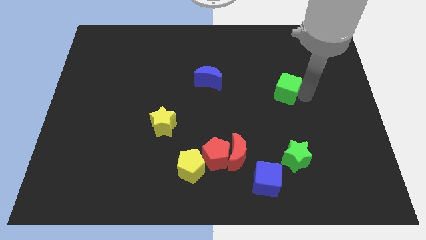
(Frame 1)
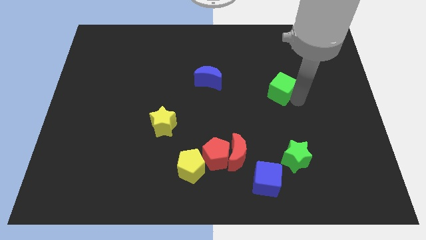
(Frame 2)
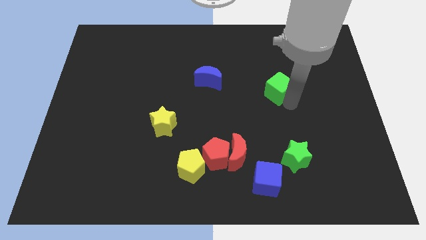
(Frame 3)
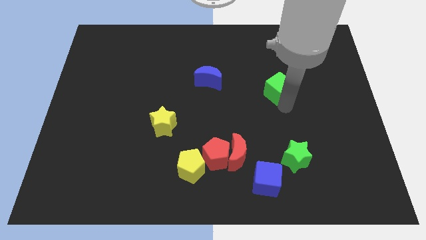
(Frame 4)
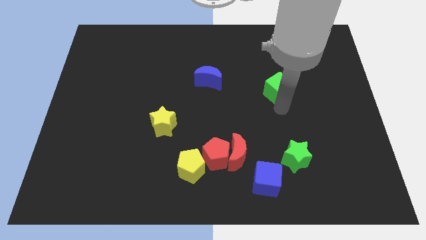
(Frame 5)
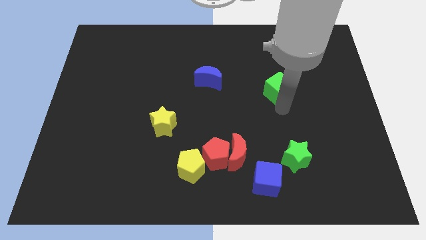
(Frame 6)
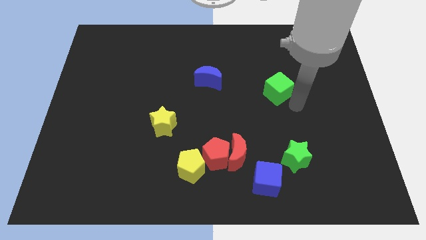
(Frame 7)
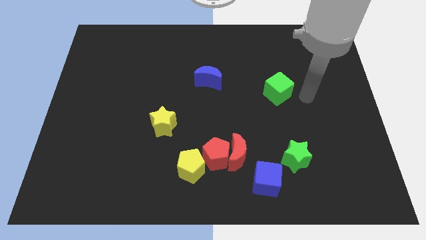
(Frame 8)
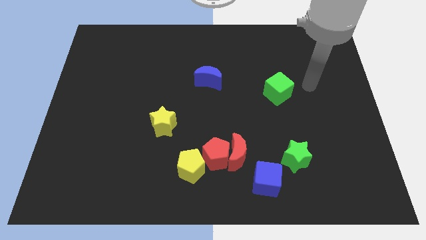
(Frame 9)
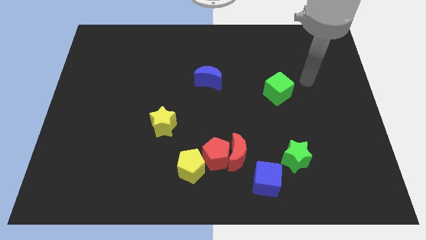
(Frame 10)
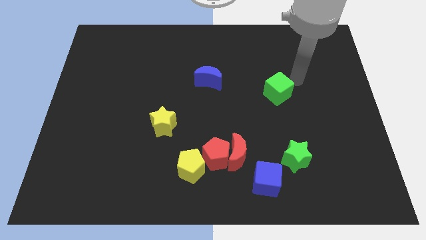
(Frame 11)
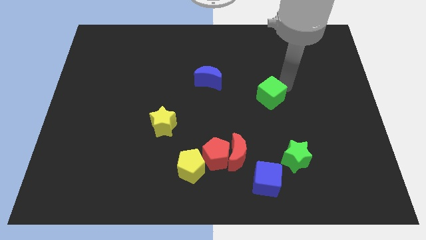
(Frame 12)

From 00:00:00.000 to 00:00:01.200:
push green cube below blue cube

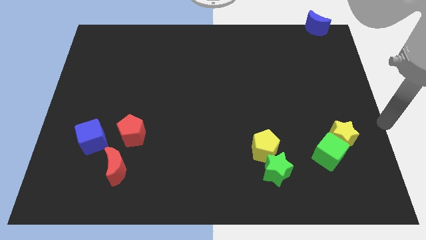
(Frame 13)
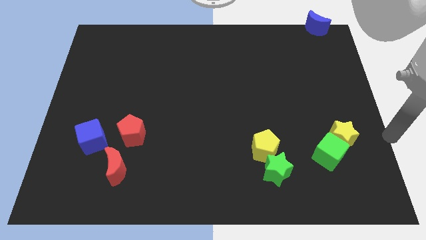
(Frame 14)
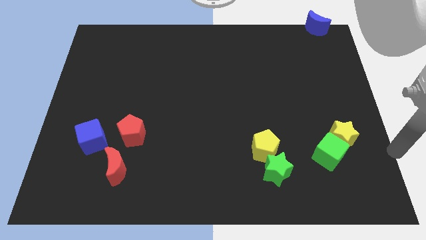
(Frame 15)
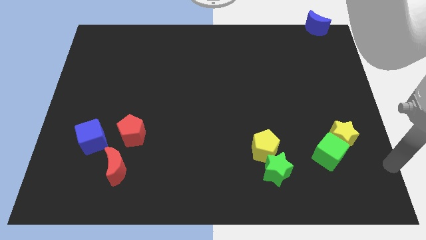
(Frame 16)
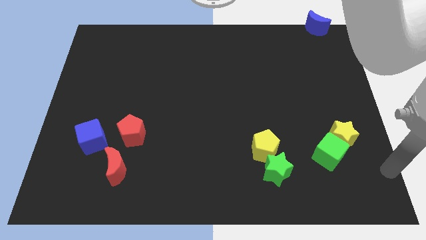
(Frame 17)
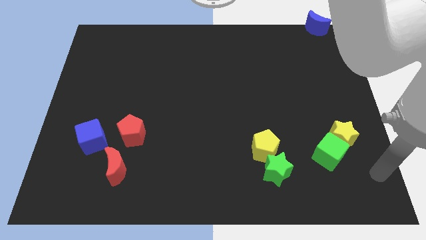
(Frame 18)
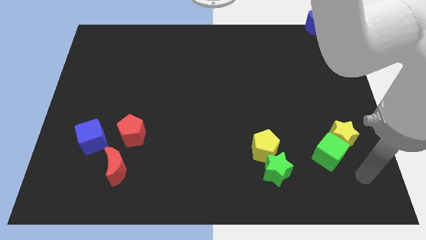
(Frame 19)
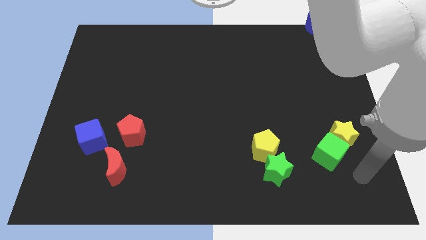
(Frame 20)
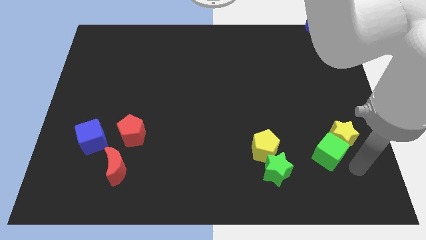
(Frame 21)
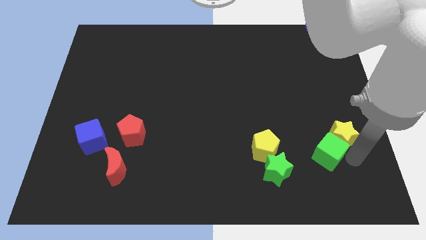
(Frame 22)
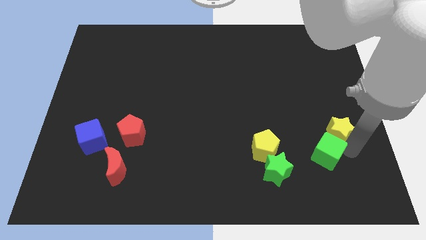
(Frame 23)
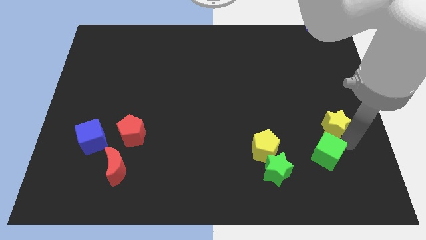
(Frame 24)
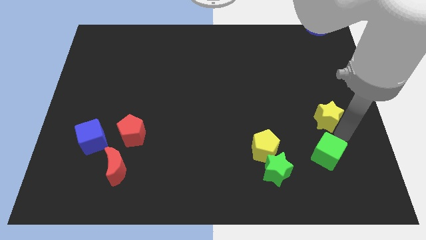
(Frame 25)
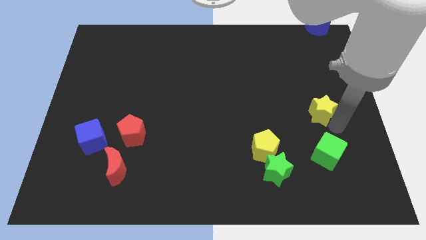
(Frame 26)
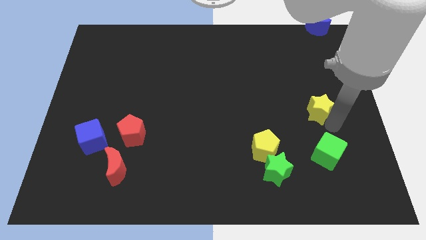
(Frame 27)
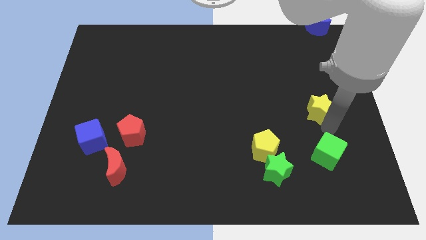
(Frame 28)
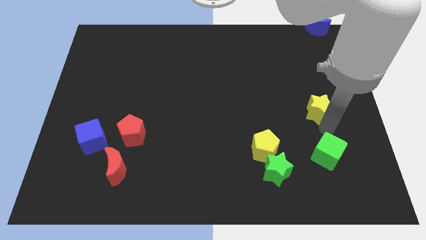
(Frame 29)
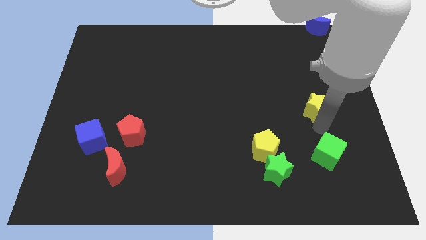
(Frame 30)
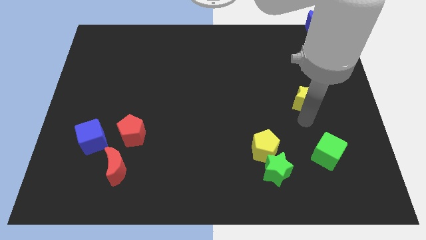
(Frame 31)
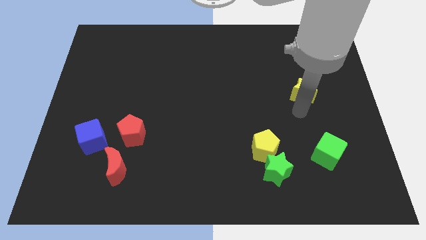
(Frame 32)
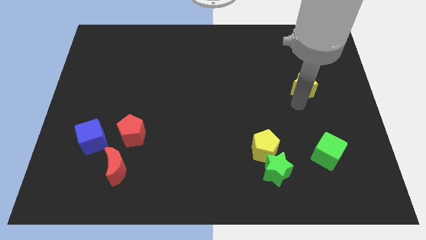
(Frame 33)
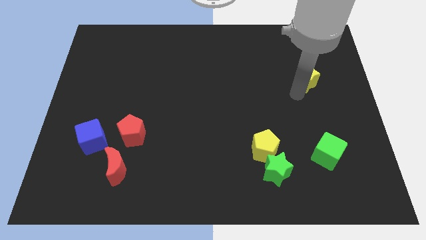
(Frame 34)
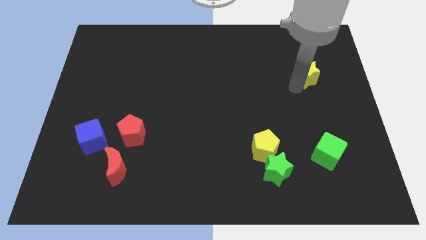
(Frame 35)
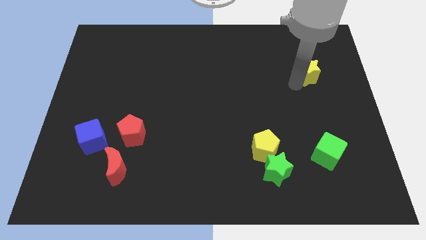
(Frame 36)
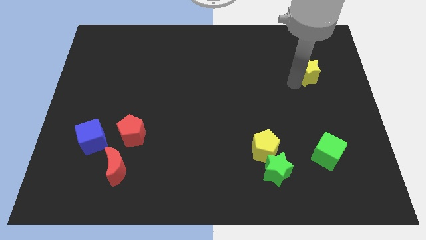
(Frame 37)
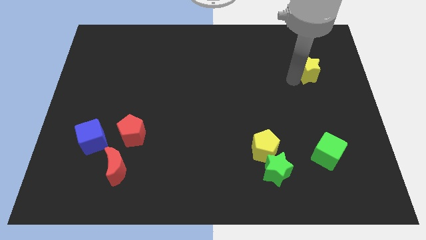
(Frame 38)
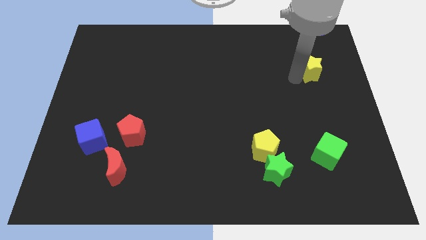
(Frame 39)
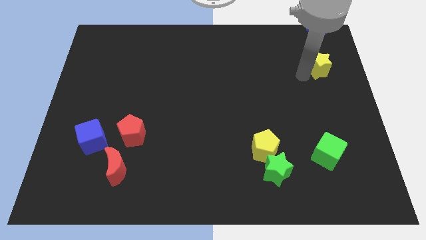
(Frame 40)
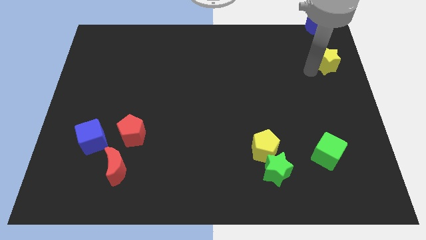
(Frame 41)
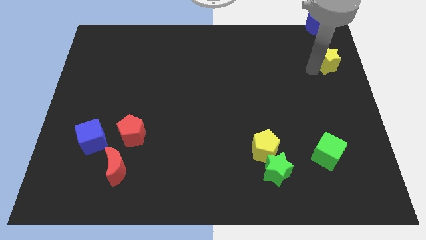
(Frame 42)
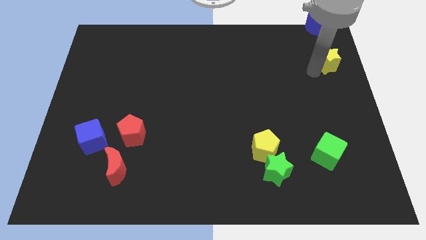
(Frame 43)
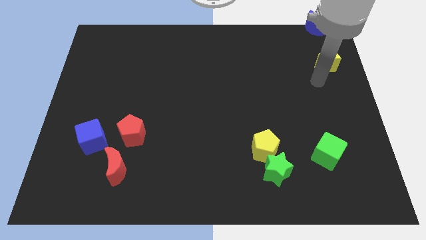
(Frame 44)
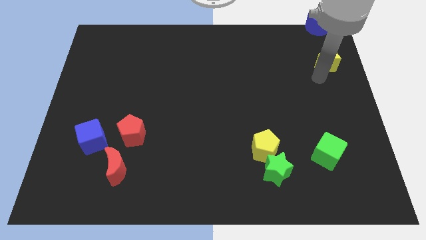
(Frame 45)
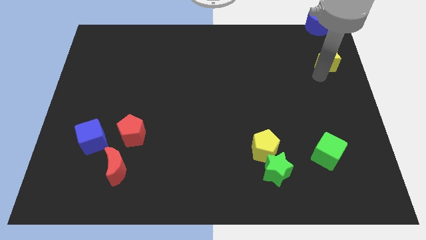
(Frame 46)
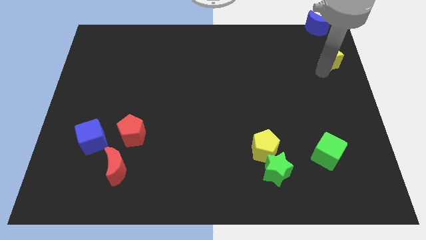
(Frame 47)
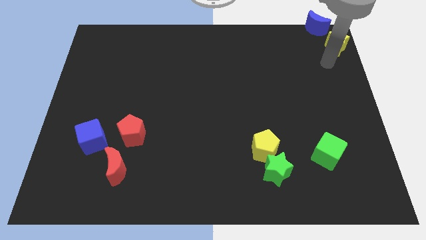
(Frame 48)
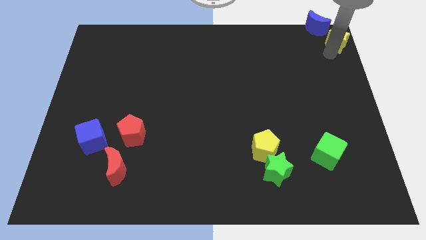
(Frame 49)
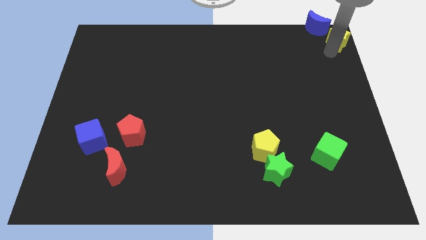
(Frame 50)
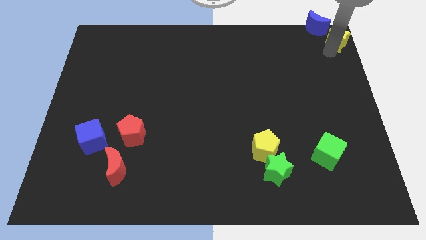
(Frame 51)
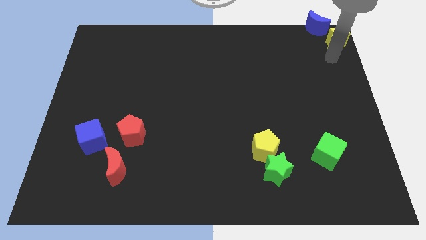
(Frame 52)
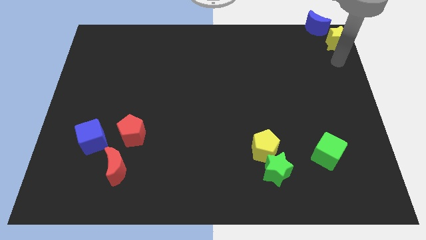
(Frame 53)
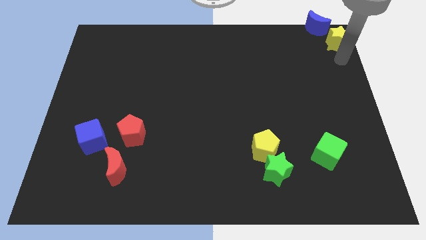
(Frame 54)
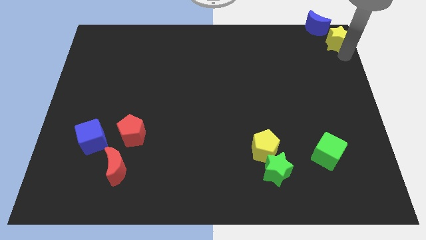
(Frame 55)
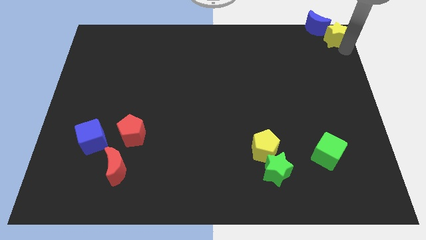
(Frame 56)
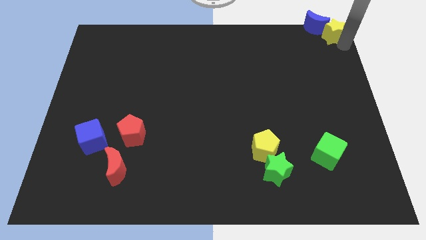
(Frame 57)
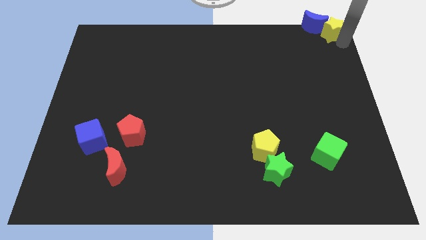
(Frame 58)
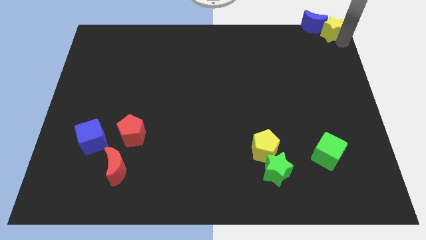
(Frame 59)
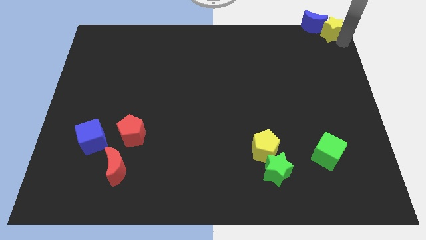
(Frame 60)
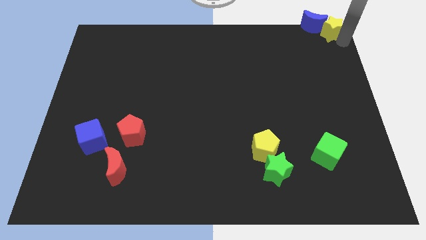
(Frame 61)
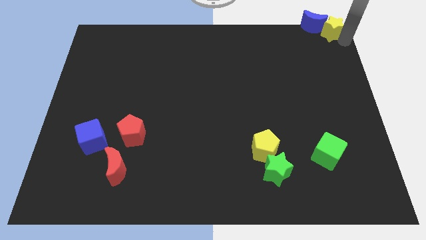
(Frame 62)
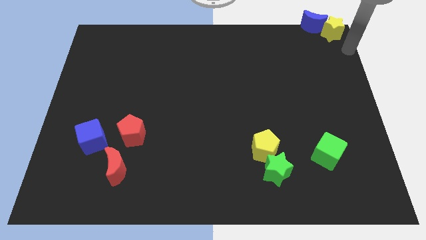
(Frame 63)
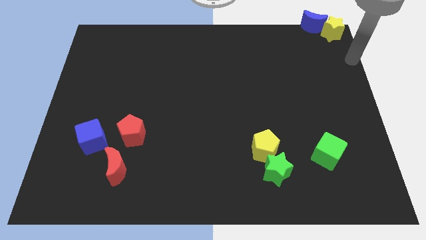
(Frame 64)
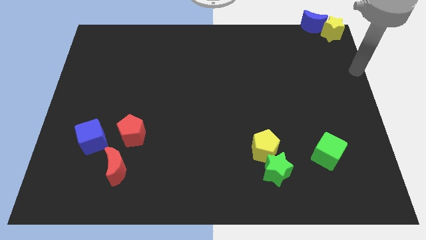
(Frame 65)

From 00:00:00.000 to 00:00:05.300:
move yellow star right beside the blue moon

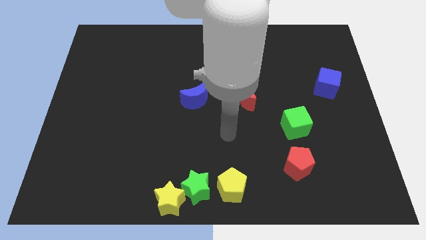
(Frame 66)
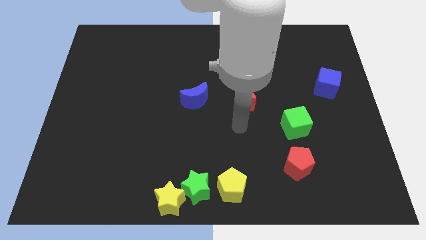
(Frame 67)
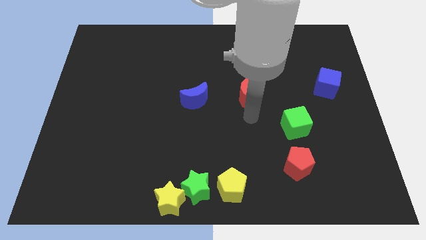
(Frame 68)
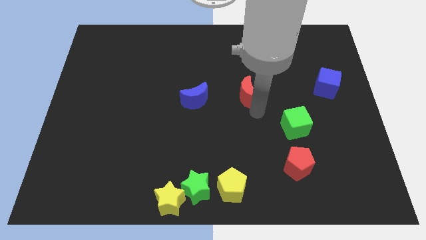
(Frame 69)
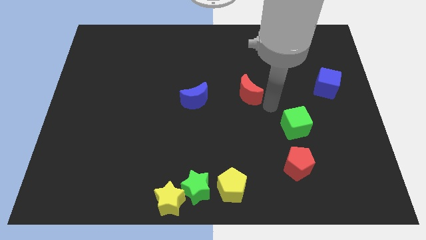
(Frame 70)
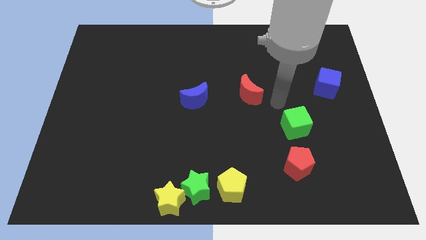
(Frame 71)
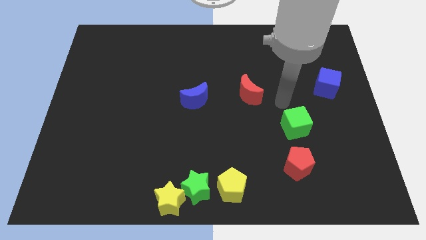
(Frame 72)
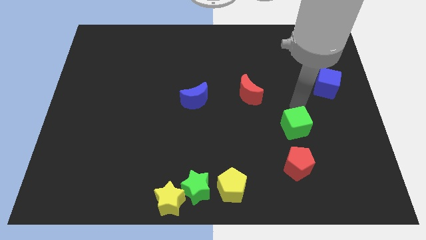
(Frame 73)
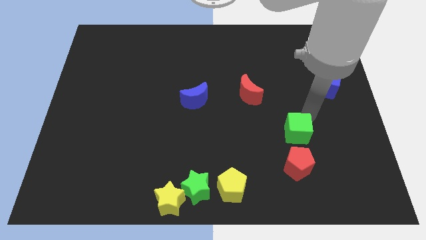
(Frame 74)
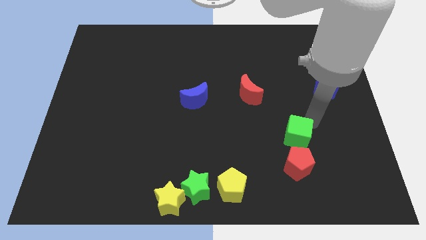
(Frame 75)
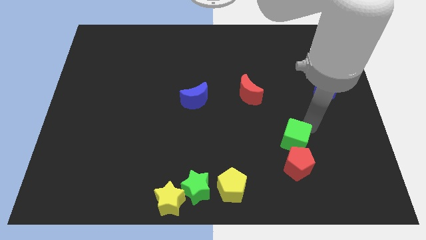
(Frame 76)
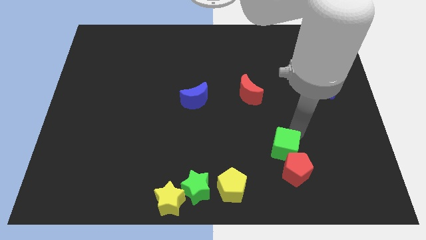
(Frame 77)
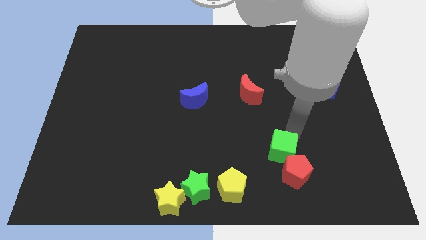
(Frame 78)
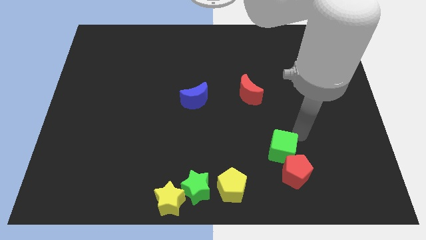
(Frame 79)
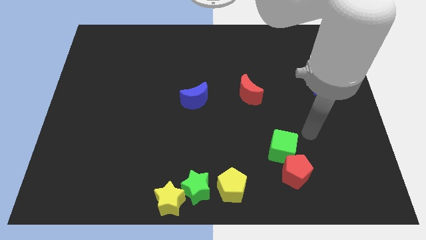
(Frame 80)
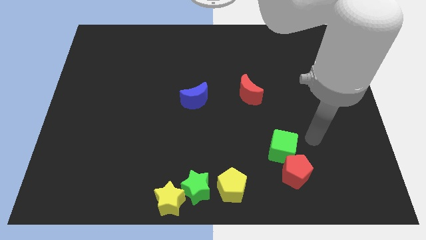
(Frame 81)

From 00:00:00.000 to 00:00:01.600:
move arm towards the green cube on the bottom right of the board

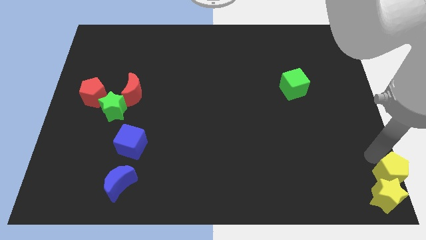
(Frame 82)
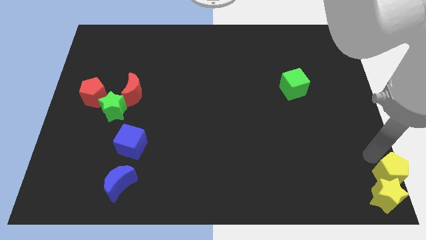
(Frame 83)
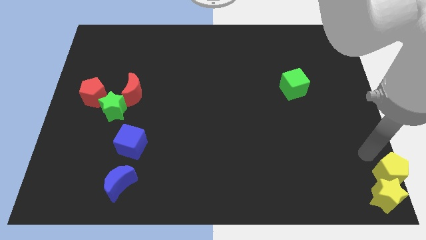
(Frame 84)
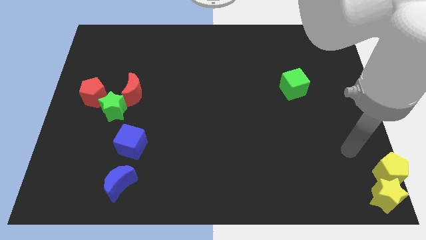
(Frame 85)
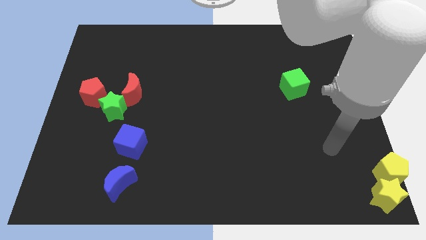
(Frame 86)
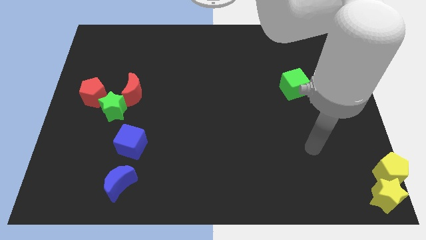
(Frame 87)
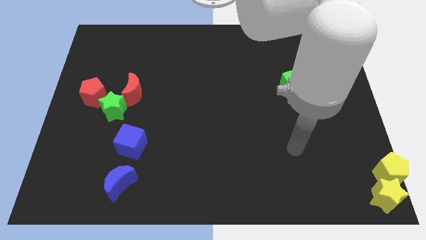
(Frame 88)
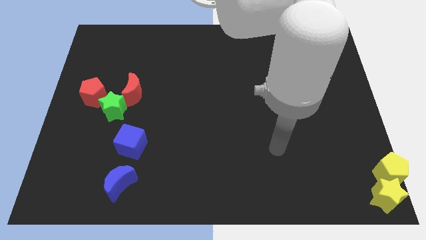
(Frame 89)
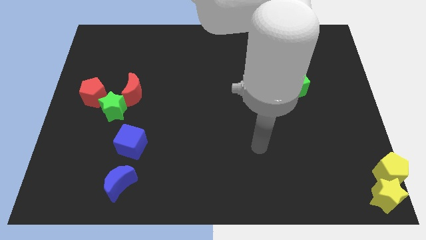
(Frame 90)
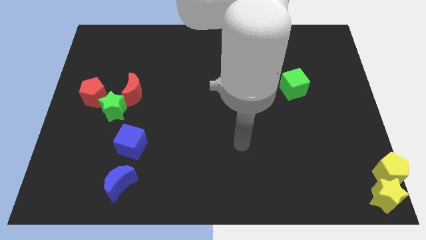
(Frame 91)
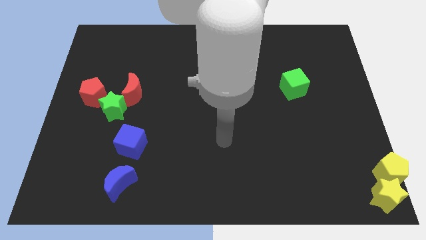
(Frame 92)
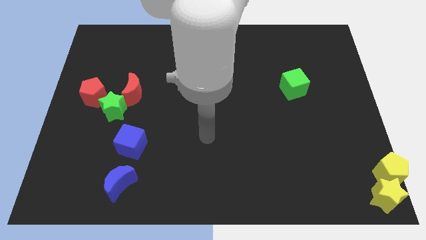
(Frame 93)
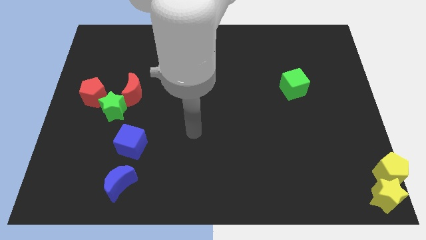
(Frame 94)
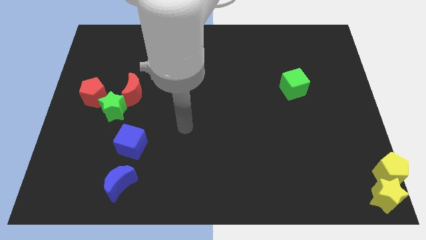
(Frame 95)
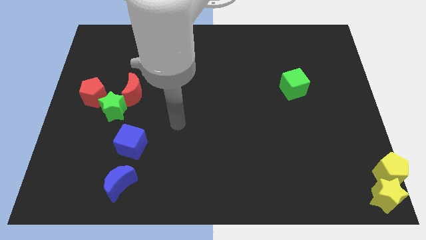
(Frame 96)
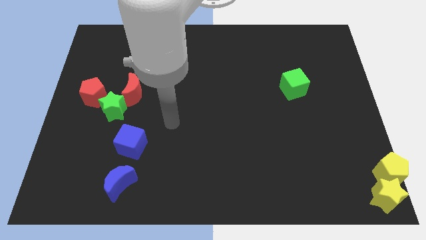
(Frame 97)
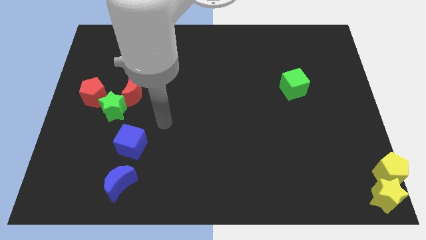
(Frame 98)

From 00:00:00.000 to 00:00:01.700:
move the arm away from the yellow pentagon
